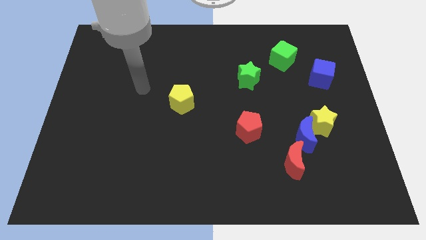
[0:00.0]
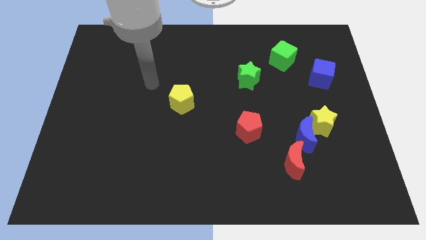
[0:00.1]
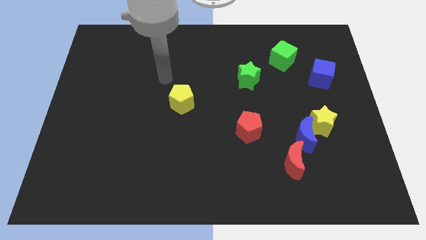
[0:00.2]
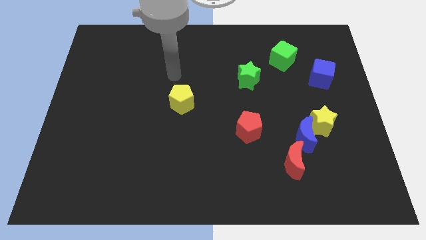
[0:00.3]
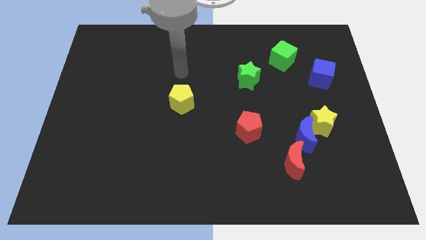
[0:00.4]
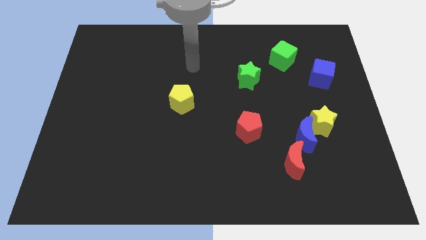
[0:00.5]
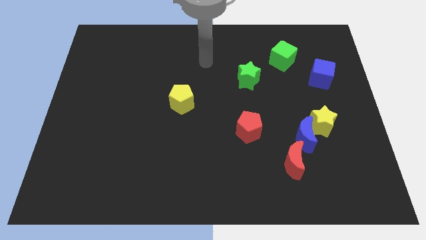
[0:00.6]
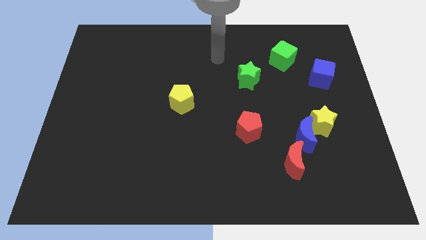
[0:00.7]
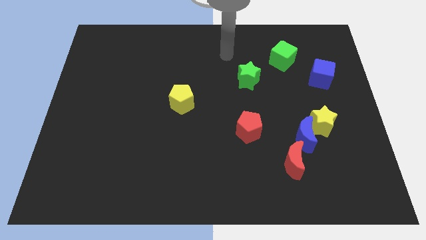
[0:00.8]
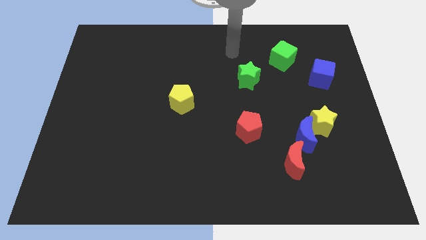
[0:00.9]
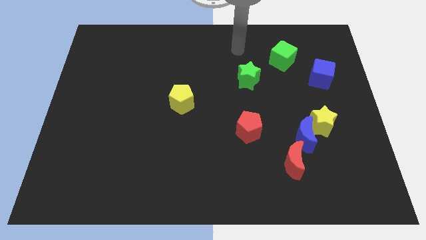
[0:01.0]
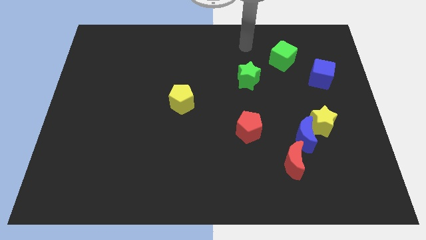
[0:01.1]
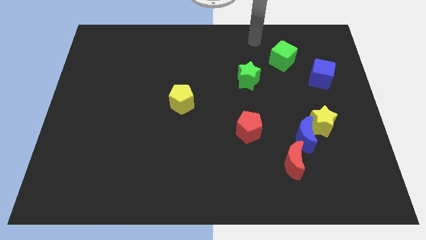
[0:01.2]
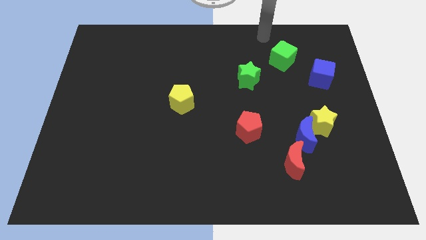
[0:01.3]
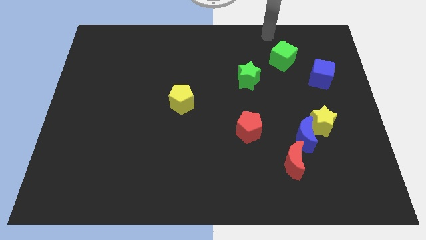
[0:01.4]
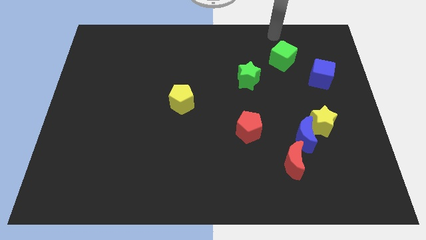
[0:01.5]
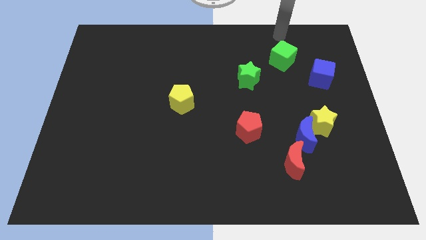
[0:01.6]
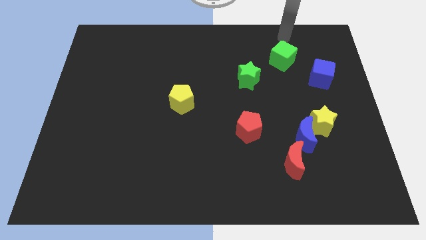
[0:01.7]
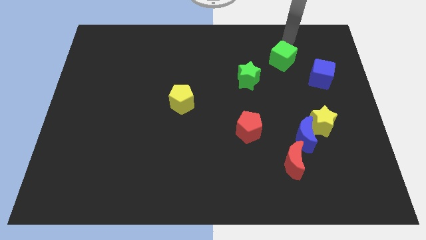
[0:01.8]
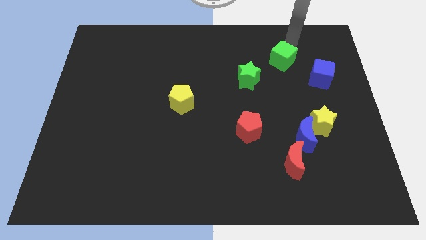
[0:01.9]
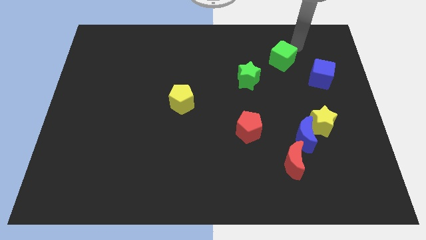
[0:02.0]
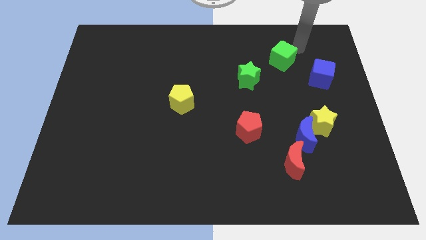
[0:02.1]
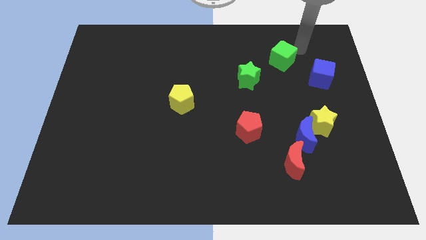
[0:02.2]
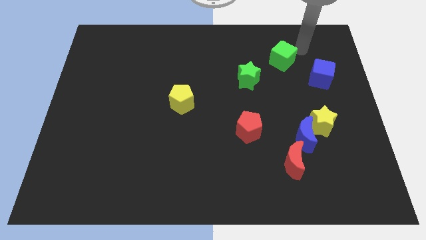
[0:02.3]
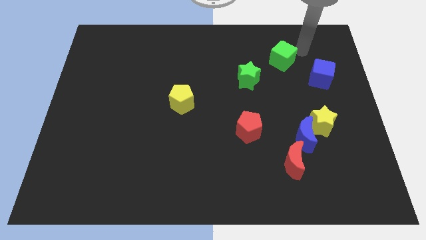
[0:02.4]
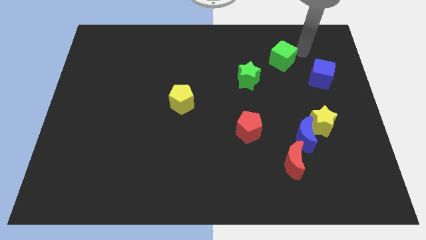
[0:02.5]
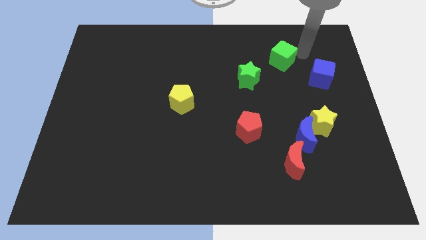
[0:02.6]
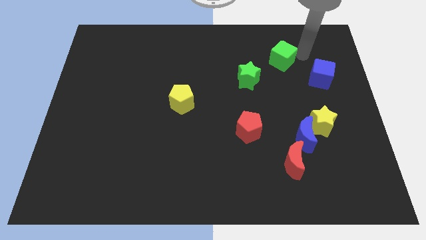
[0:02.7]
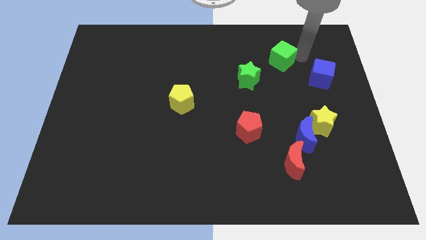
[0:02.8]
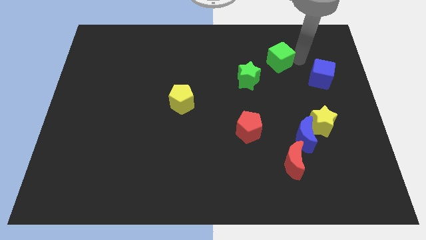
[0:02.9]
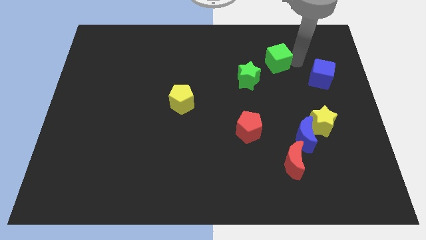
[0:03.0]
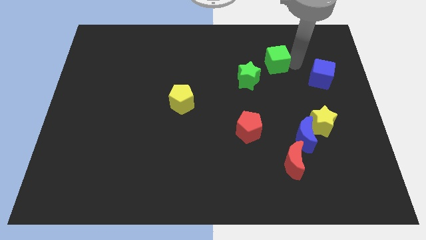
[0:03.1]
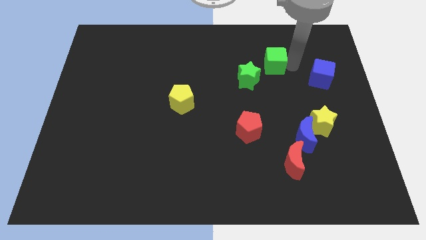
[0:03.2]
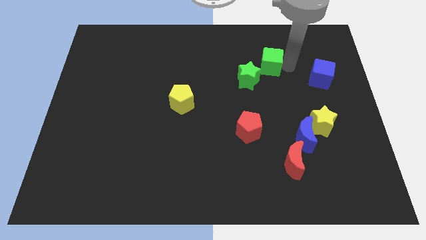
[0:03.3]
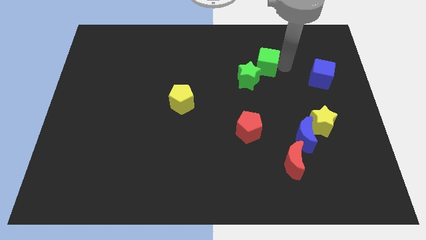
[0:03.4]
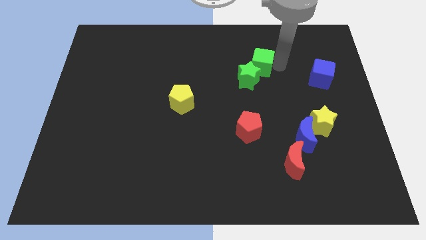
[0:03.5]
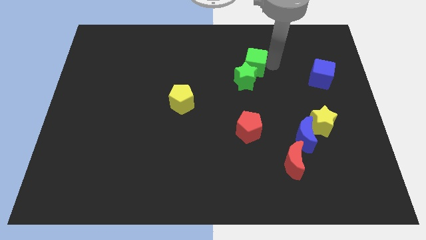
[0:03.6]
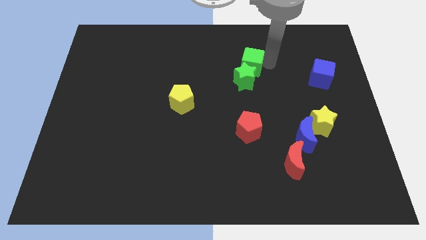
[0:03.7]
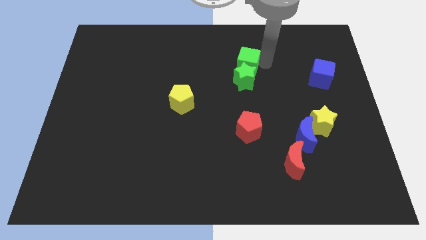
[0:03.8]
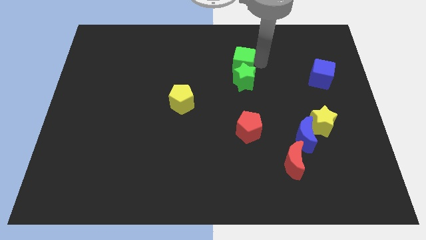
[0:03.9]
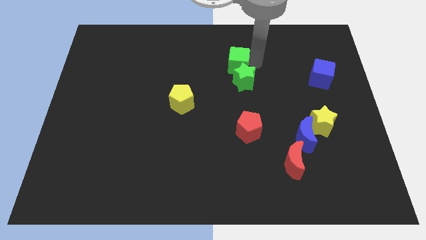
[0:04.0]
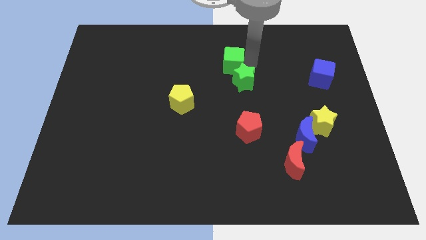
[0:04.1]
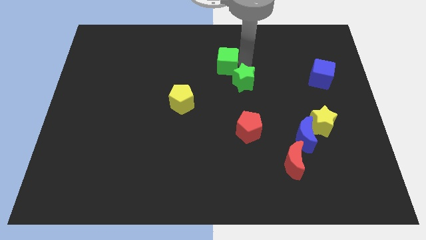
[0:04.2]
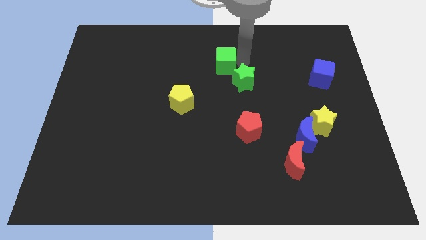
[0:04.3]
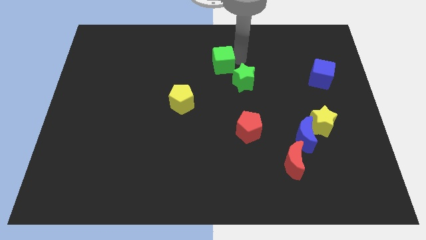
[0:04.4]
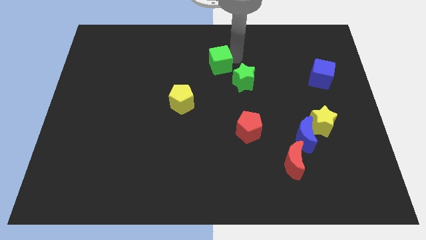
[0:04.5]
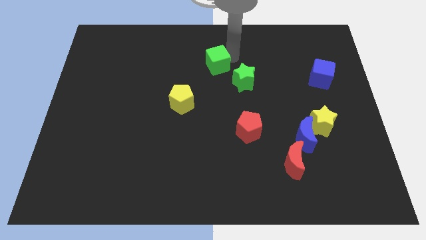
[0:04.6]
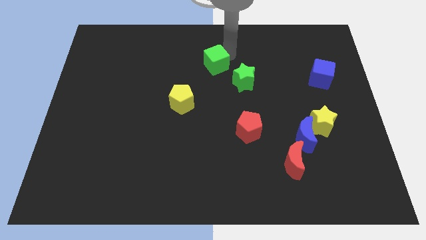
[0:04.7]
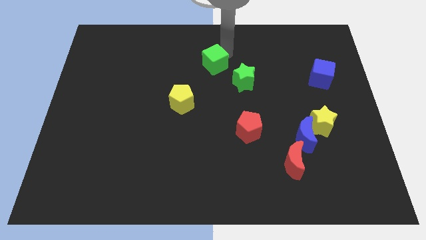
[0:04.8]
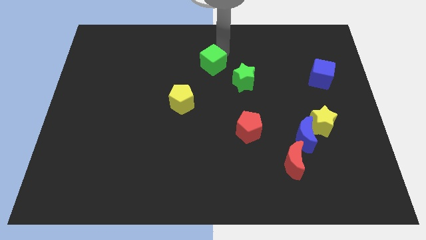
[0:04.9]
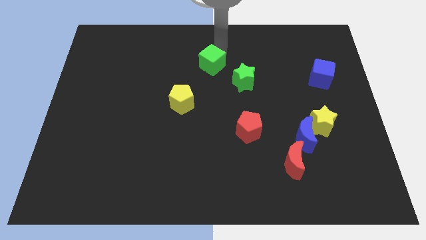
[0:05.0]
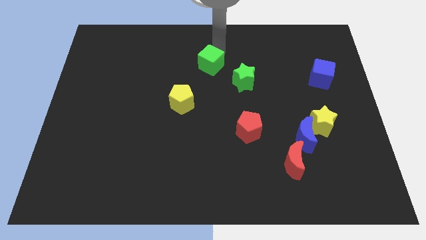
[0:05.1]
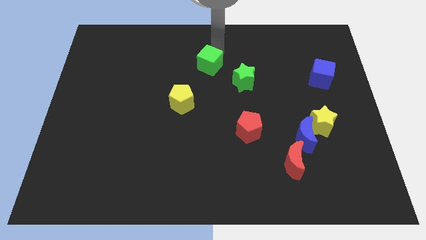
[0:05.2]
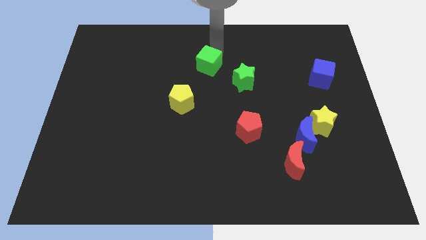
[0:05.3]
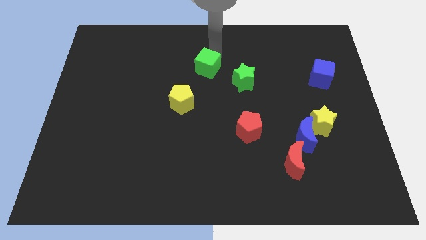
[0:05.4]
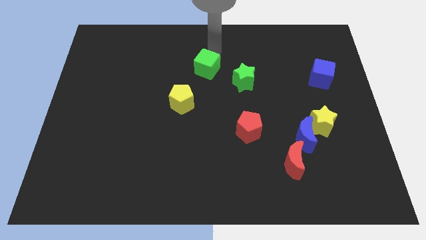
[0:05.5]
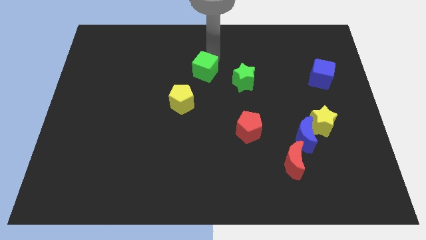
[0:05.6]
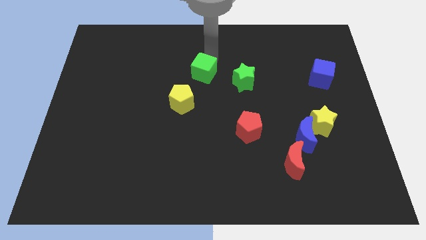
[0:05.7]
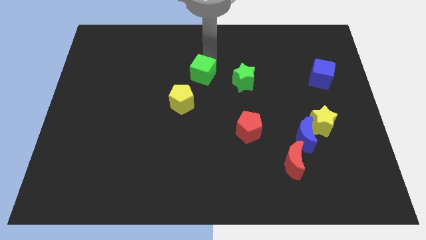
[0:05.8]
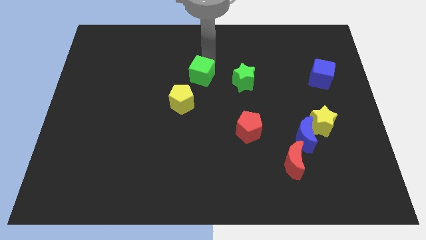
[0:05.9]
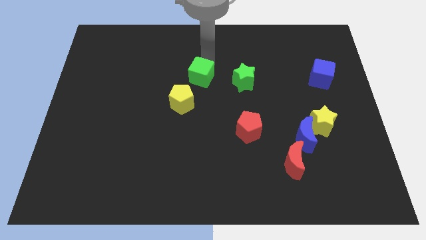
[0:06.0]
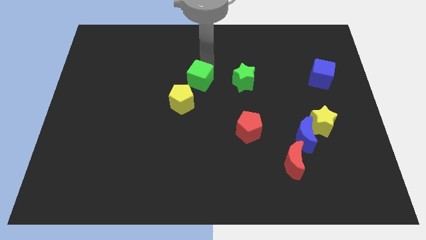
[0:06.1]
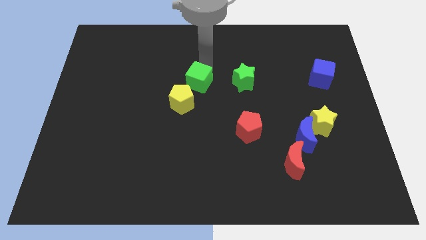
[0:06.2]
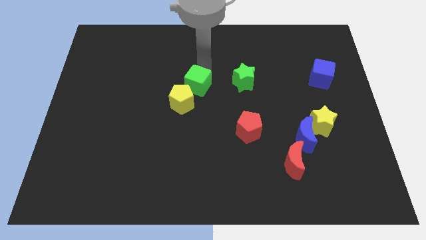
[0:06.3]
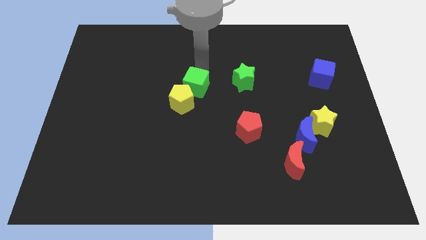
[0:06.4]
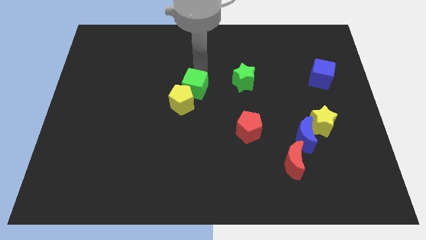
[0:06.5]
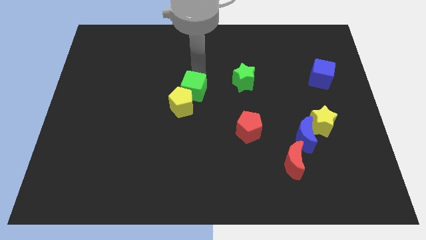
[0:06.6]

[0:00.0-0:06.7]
put the green cube next to the yellow pentagon

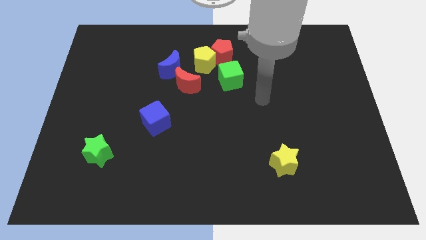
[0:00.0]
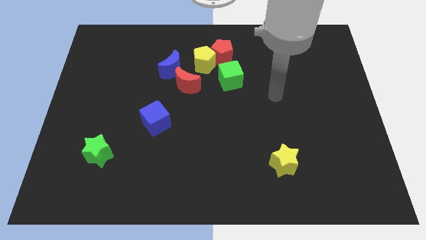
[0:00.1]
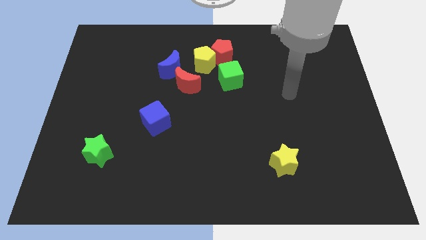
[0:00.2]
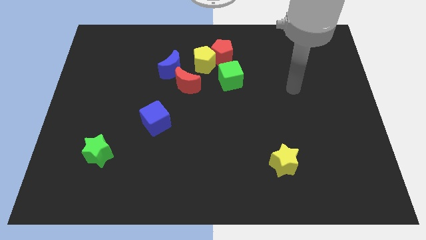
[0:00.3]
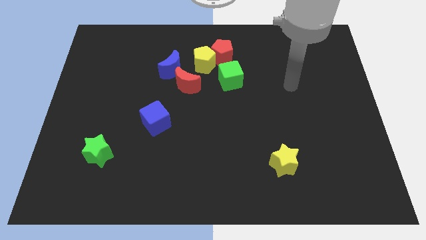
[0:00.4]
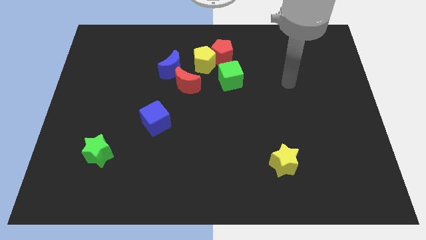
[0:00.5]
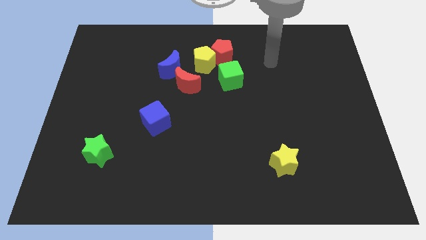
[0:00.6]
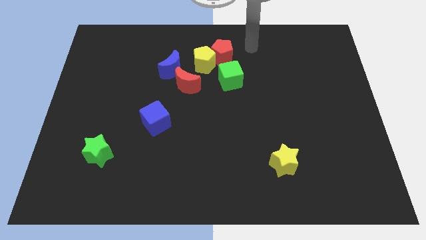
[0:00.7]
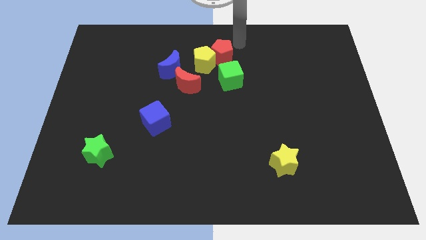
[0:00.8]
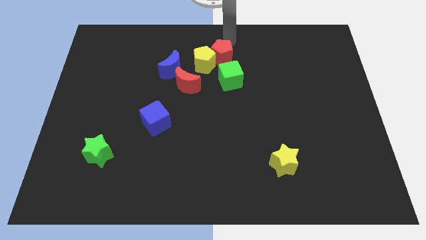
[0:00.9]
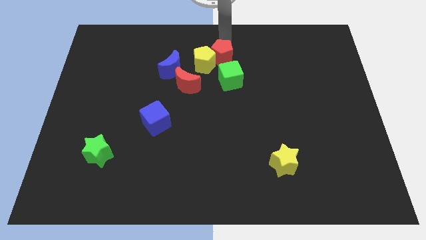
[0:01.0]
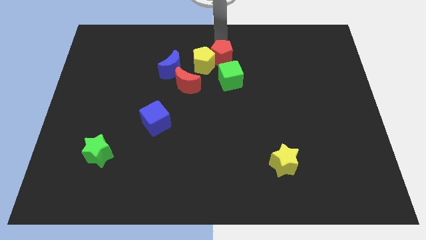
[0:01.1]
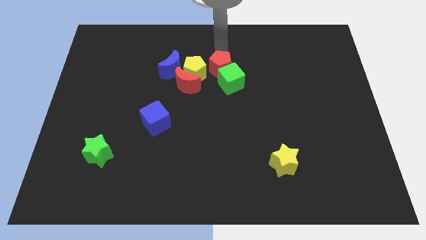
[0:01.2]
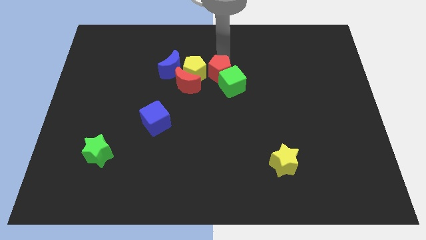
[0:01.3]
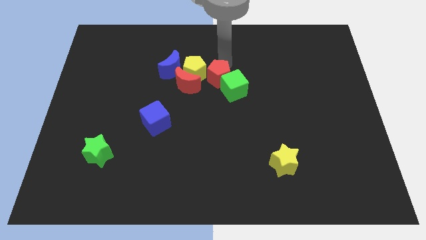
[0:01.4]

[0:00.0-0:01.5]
push the red pentagon to the green cube

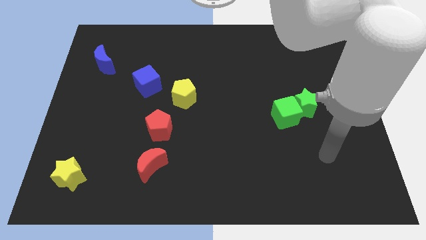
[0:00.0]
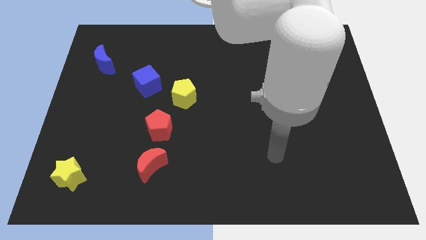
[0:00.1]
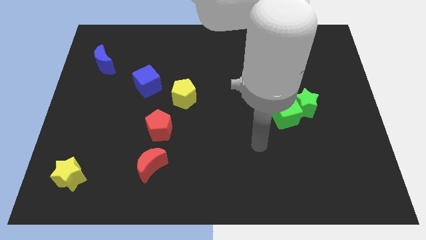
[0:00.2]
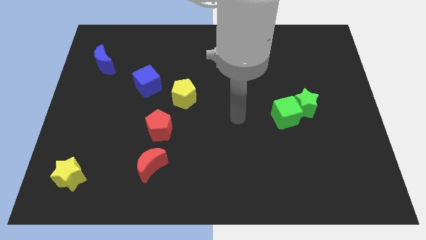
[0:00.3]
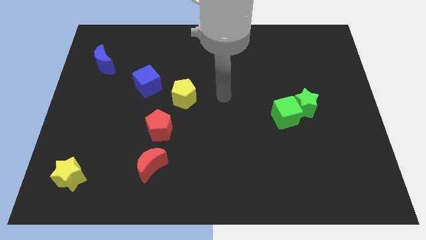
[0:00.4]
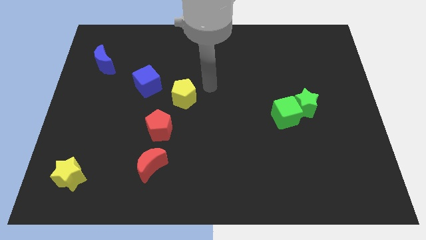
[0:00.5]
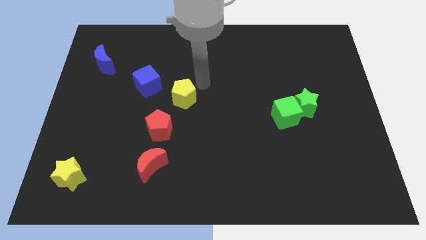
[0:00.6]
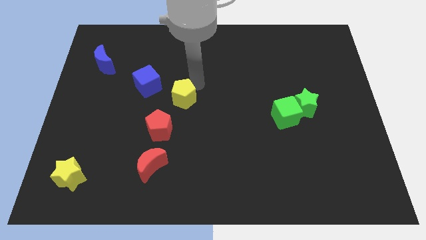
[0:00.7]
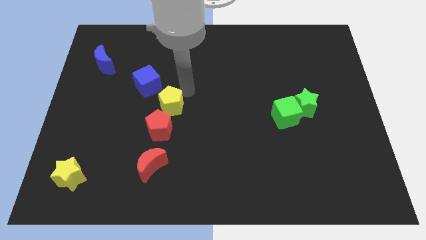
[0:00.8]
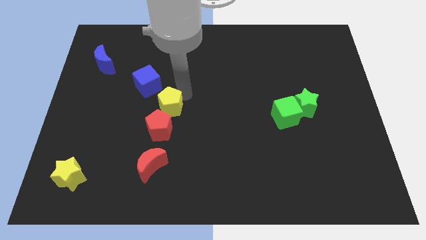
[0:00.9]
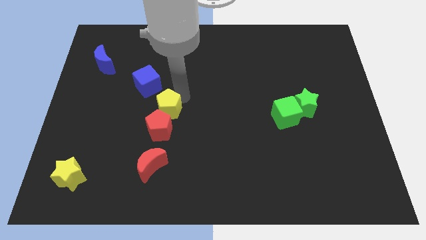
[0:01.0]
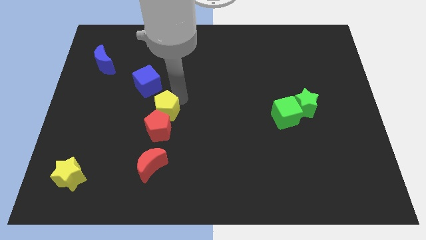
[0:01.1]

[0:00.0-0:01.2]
move the yellow pentagon close to the red pentagon
